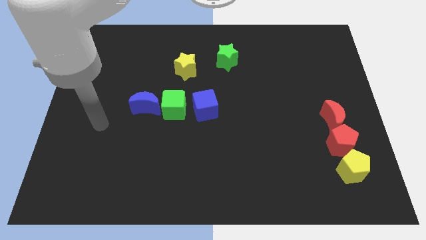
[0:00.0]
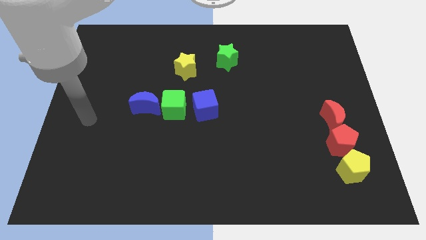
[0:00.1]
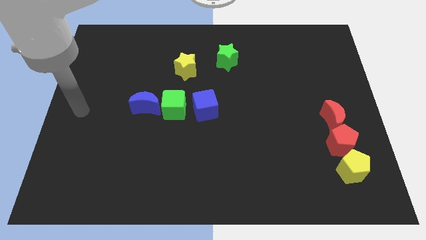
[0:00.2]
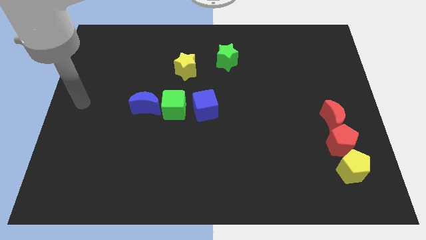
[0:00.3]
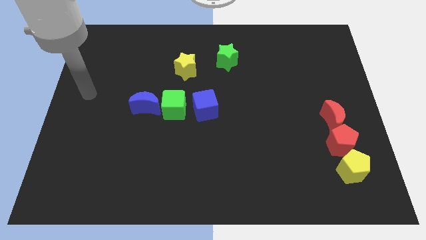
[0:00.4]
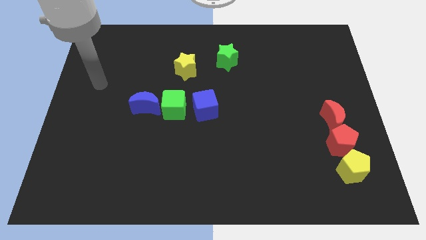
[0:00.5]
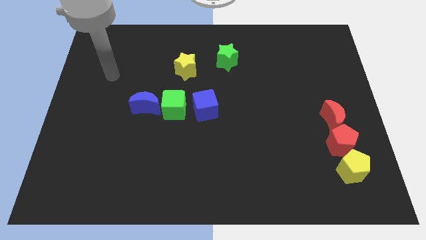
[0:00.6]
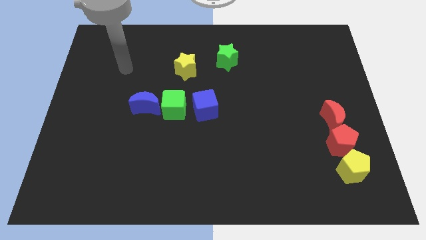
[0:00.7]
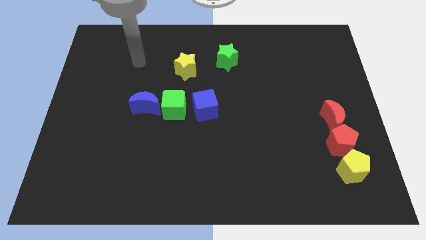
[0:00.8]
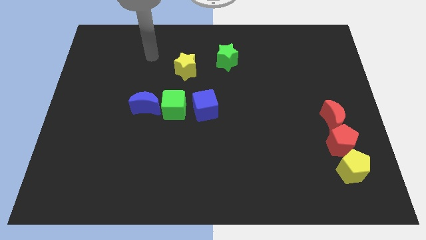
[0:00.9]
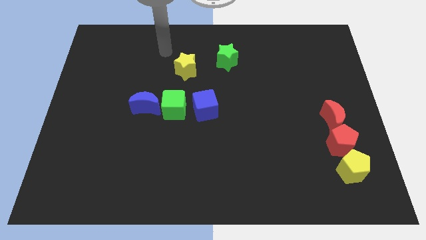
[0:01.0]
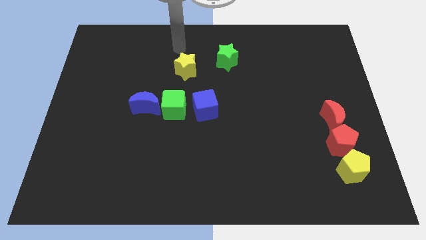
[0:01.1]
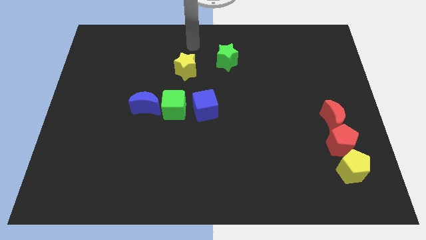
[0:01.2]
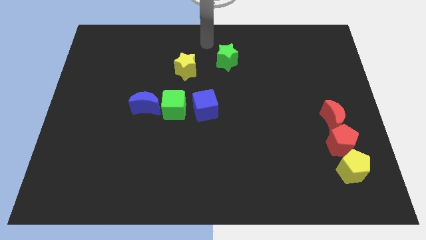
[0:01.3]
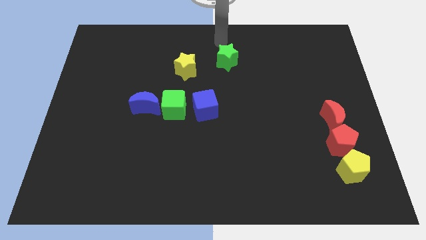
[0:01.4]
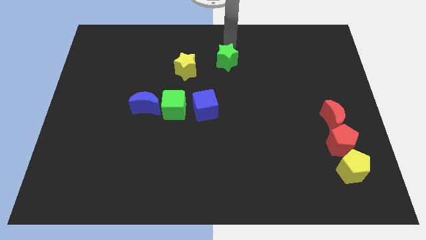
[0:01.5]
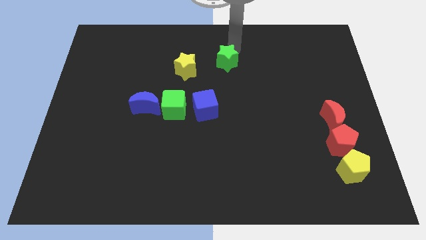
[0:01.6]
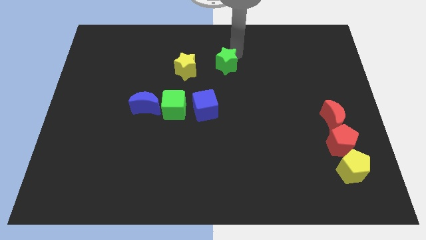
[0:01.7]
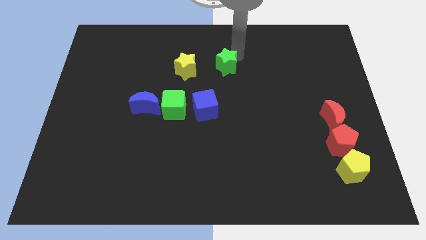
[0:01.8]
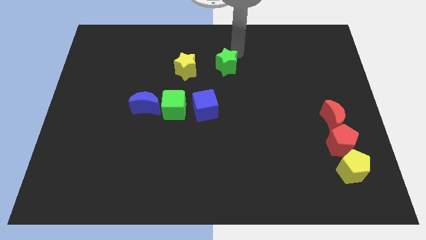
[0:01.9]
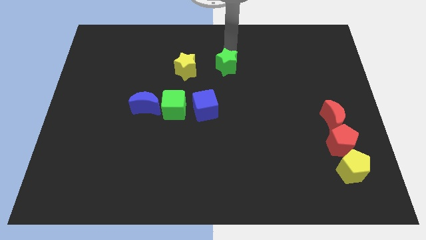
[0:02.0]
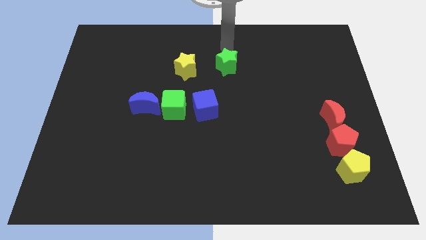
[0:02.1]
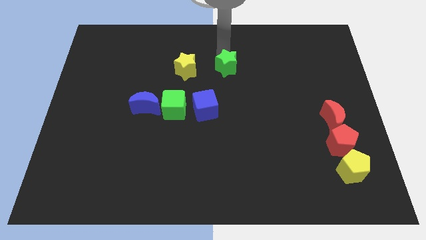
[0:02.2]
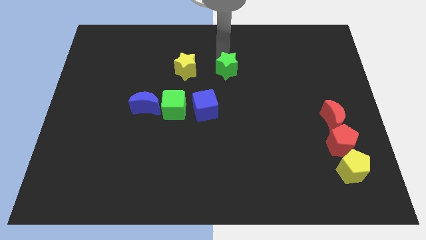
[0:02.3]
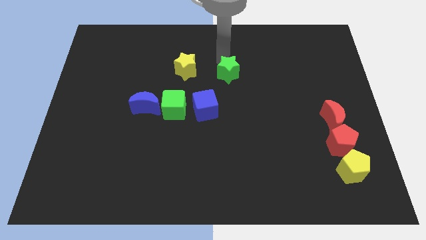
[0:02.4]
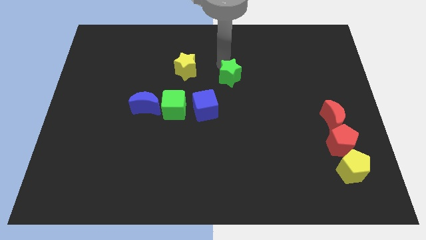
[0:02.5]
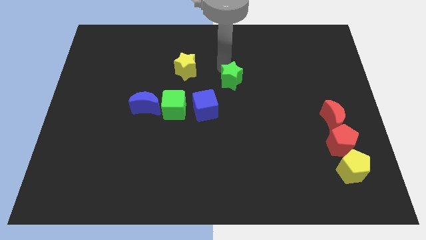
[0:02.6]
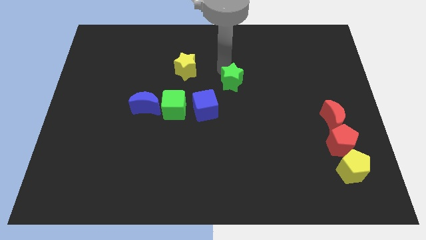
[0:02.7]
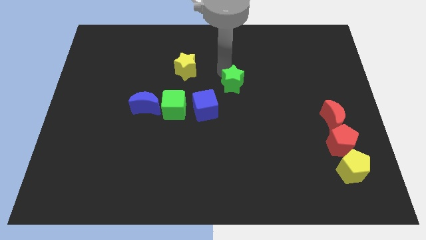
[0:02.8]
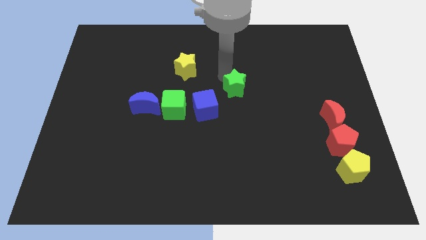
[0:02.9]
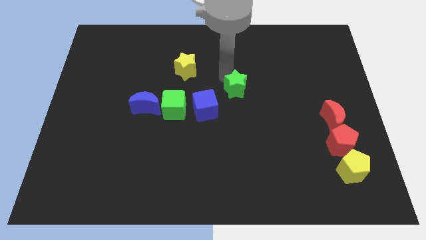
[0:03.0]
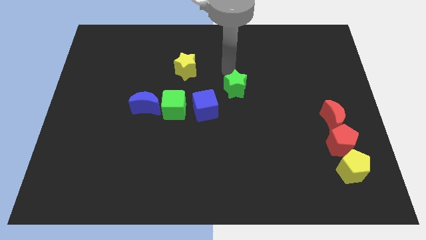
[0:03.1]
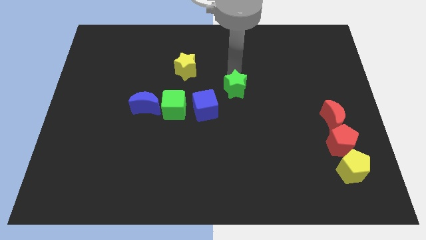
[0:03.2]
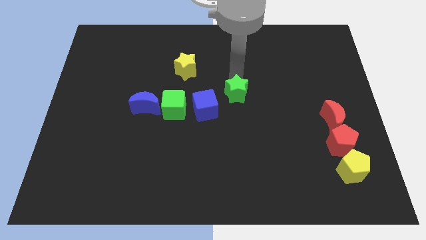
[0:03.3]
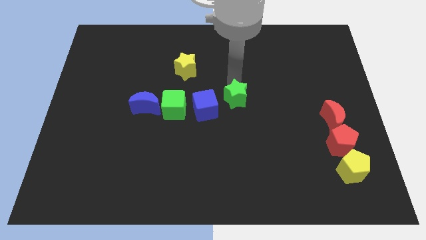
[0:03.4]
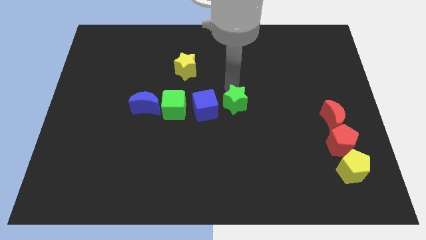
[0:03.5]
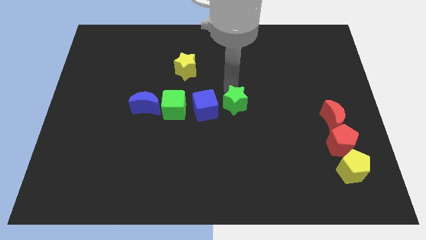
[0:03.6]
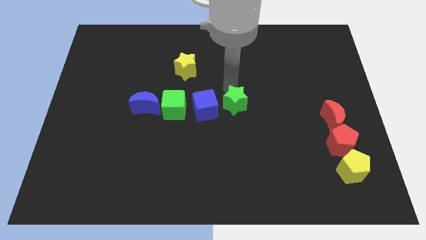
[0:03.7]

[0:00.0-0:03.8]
place the green star at right side of the blue cube

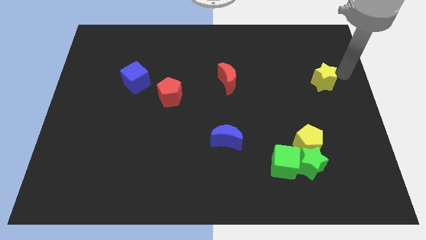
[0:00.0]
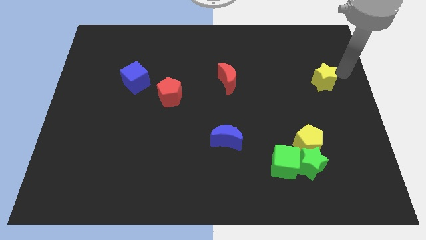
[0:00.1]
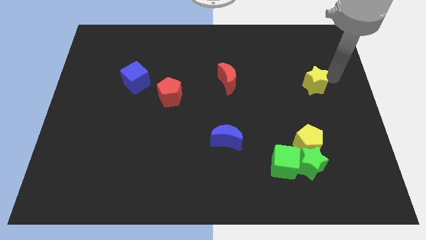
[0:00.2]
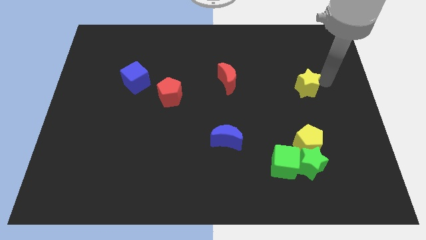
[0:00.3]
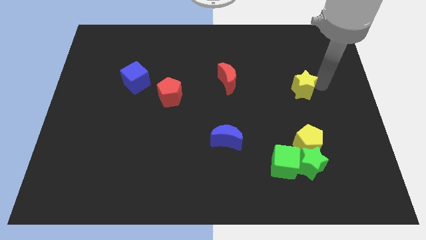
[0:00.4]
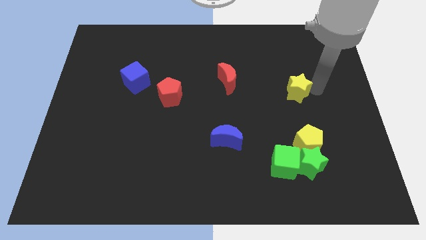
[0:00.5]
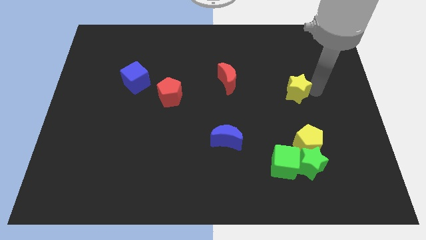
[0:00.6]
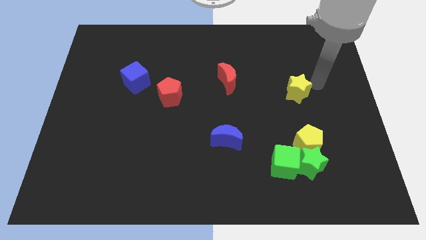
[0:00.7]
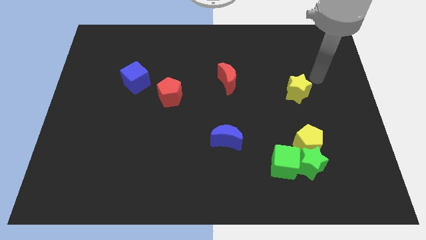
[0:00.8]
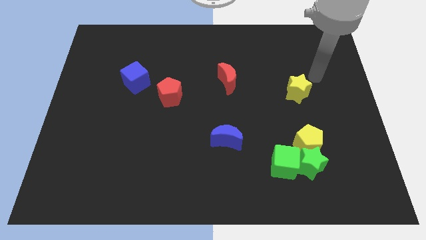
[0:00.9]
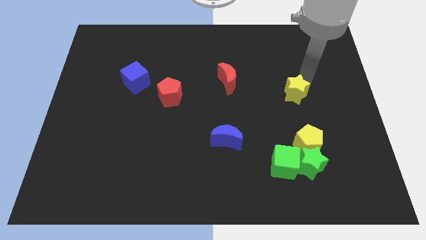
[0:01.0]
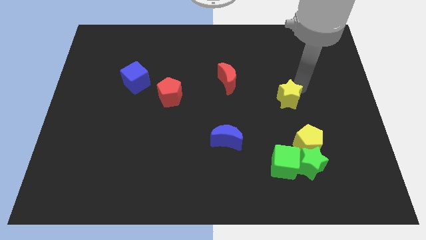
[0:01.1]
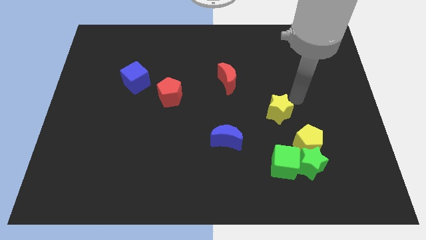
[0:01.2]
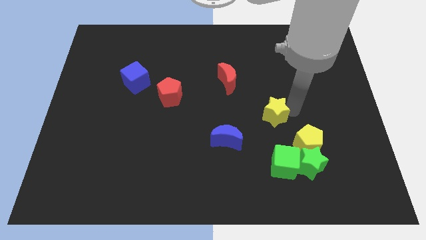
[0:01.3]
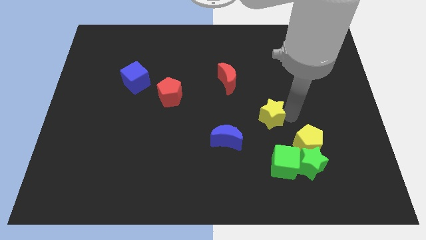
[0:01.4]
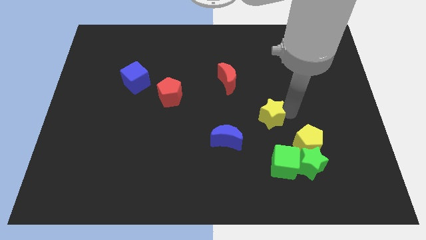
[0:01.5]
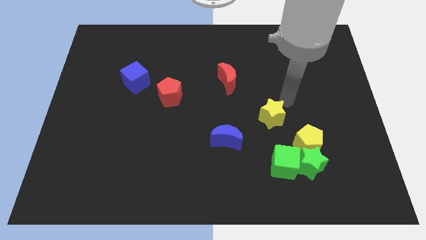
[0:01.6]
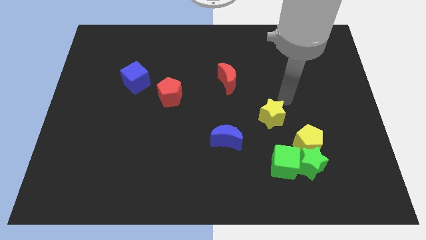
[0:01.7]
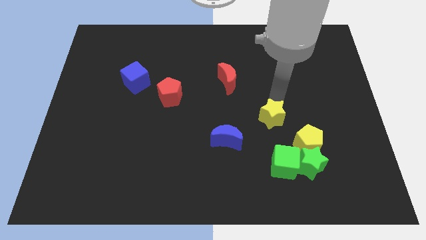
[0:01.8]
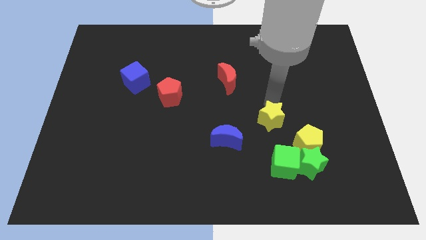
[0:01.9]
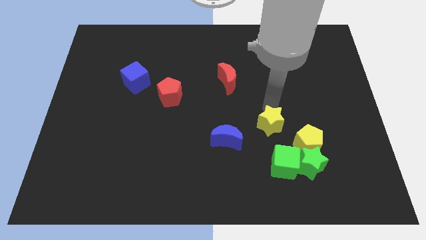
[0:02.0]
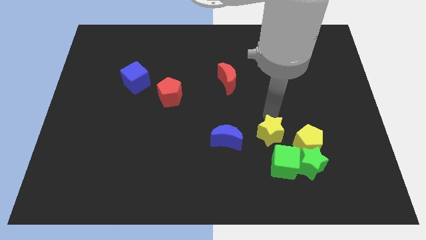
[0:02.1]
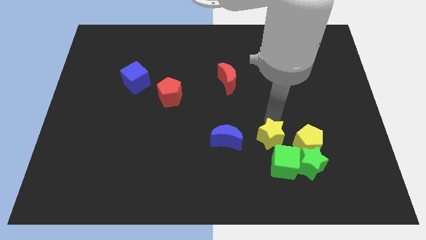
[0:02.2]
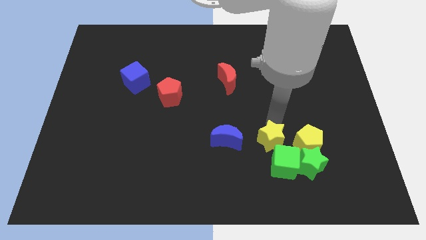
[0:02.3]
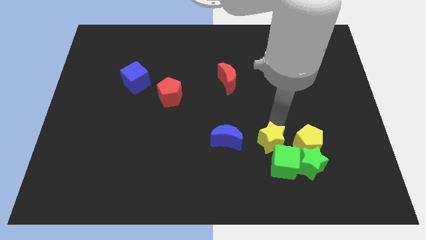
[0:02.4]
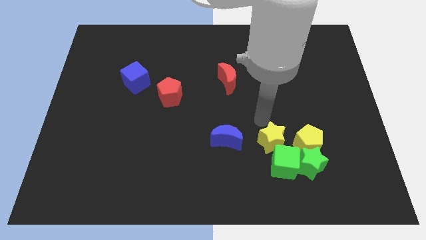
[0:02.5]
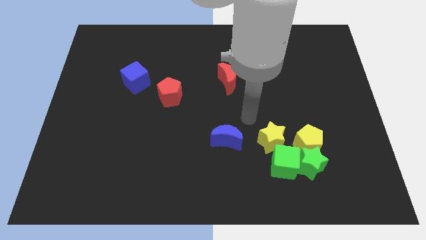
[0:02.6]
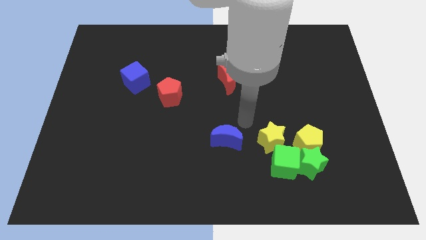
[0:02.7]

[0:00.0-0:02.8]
move the yellow star to the left of the yellow pentagon

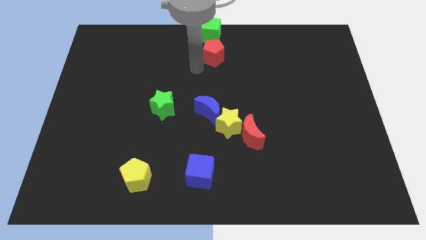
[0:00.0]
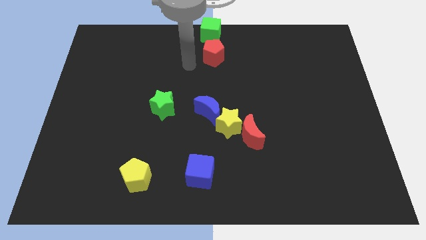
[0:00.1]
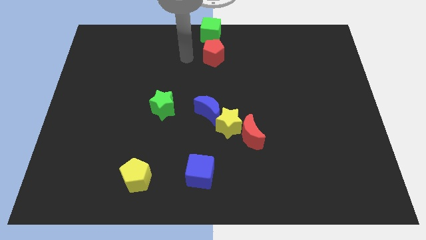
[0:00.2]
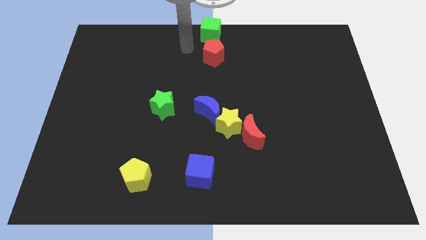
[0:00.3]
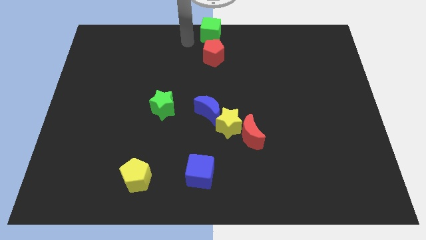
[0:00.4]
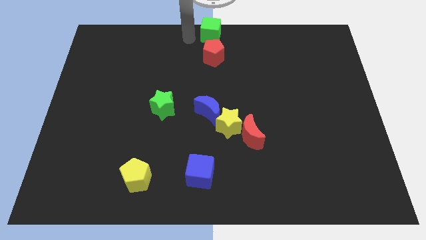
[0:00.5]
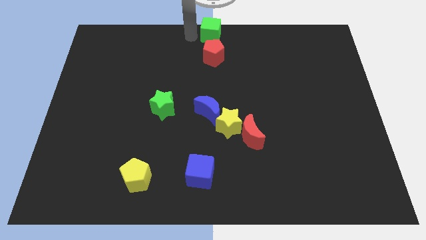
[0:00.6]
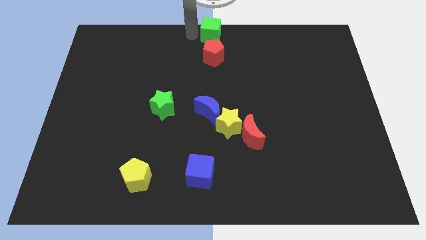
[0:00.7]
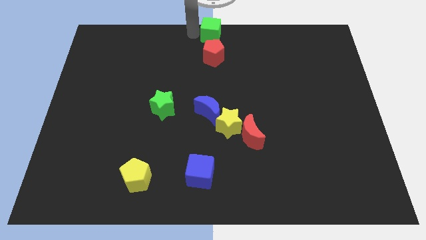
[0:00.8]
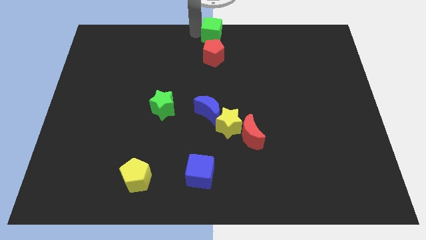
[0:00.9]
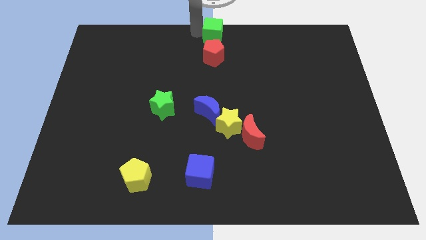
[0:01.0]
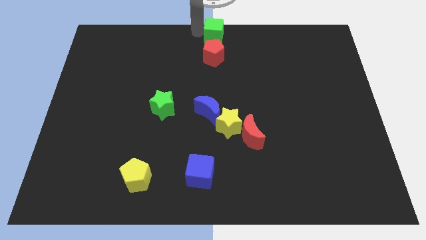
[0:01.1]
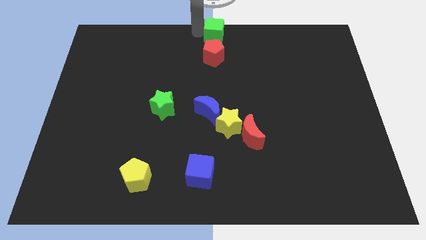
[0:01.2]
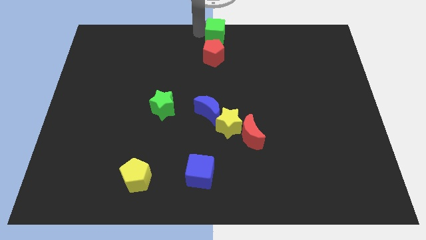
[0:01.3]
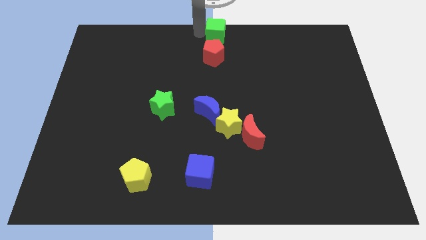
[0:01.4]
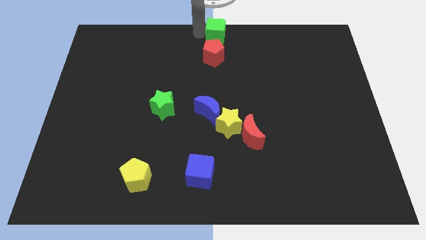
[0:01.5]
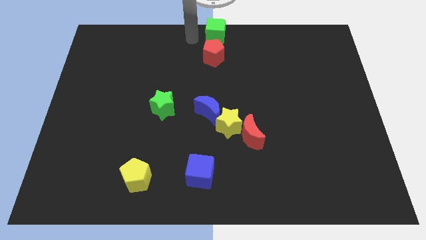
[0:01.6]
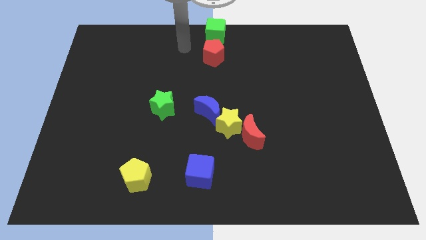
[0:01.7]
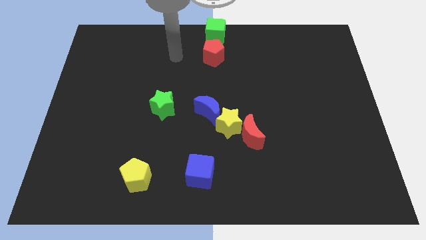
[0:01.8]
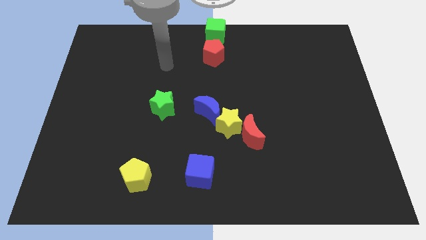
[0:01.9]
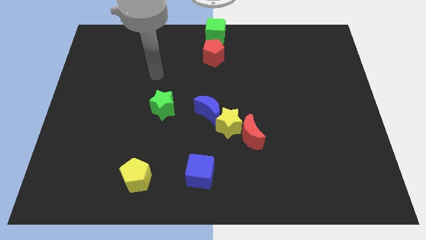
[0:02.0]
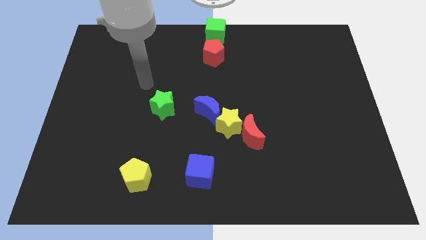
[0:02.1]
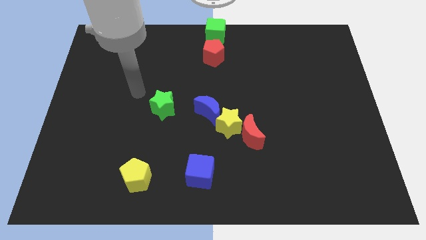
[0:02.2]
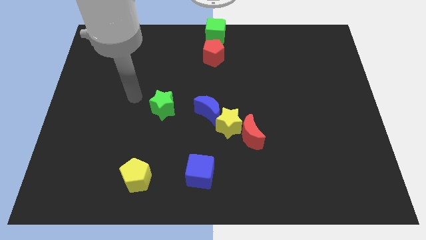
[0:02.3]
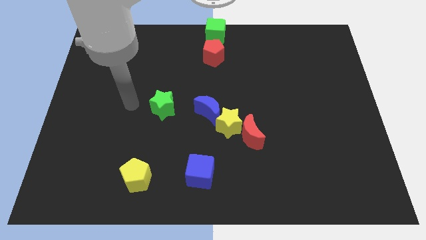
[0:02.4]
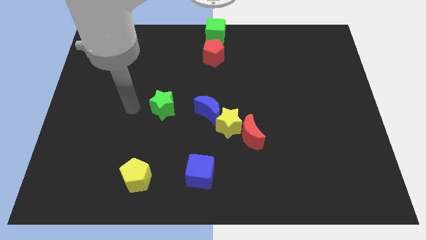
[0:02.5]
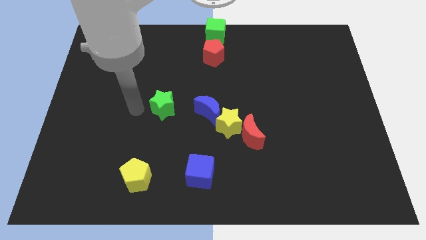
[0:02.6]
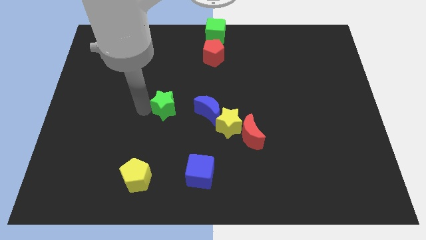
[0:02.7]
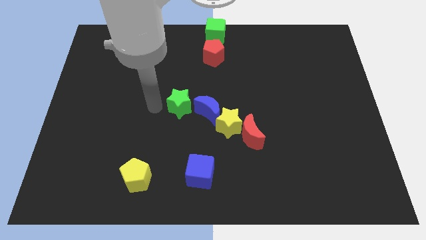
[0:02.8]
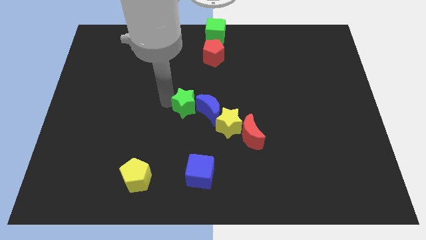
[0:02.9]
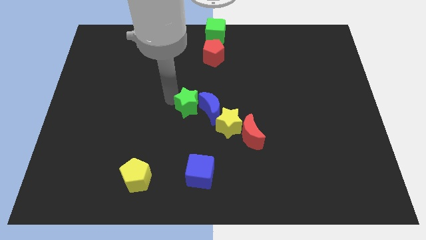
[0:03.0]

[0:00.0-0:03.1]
slightly push the green cube and green star towards the right
